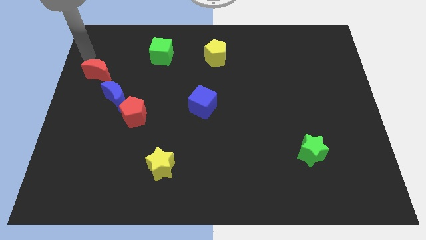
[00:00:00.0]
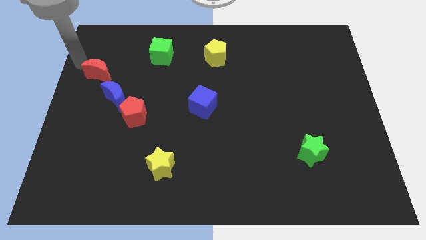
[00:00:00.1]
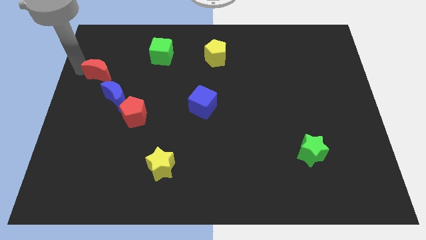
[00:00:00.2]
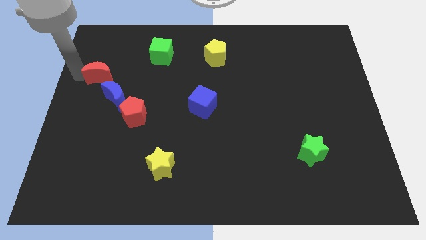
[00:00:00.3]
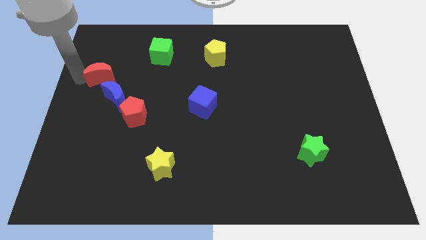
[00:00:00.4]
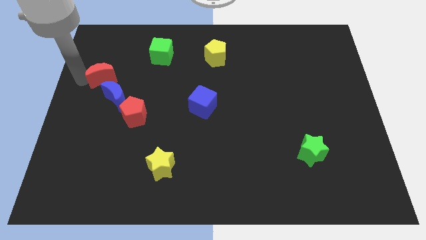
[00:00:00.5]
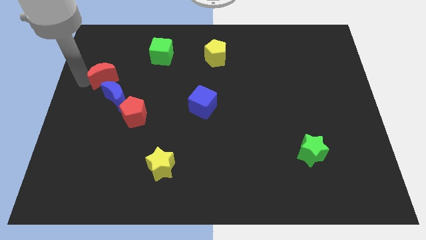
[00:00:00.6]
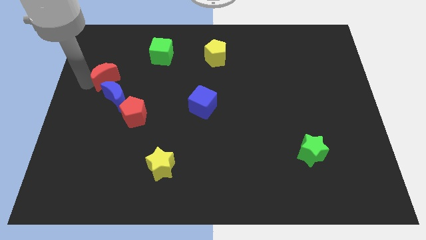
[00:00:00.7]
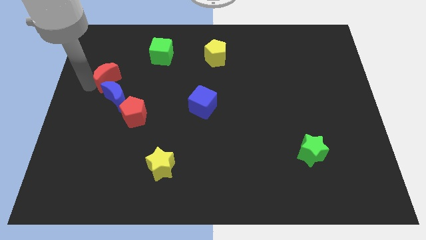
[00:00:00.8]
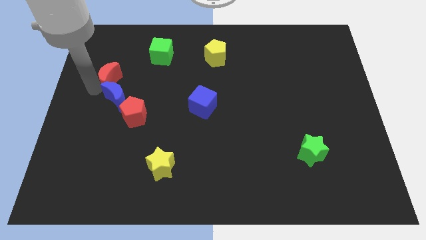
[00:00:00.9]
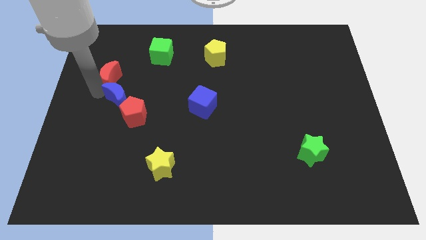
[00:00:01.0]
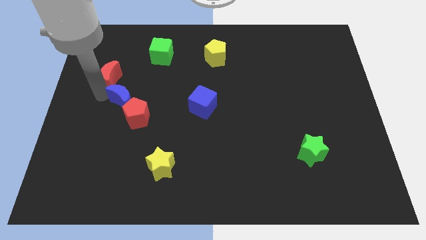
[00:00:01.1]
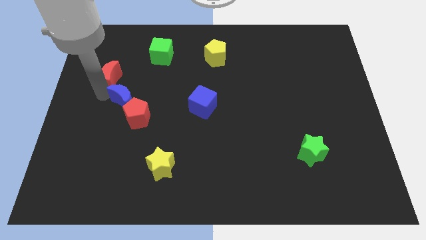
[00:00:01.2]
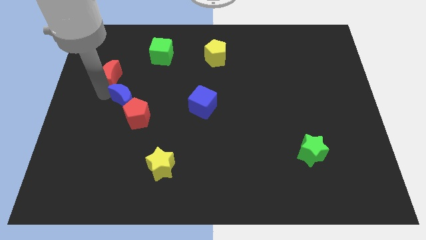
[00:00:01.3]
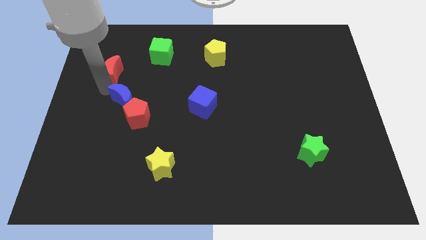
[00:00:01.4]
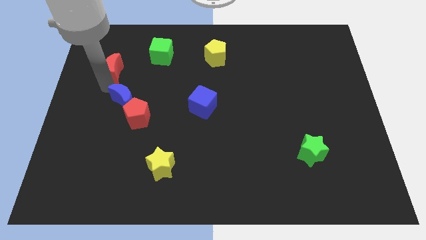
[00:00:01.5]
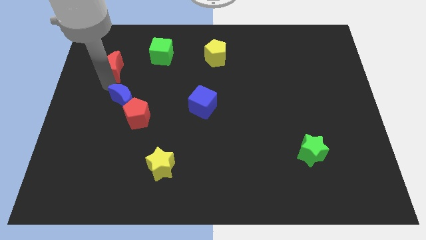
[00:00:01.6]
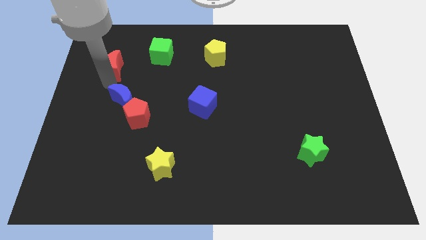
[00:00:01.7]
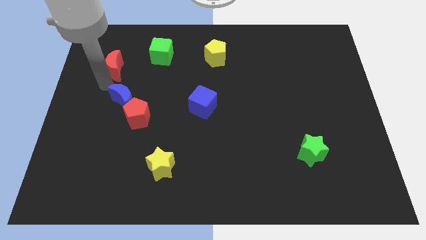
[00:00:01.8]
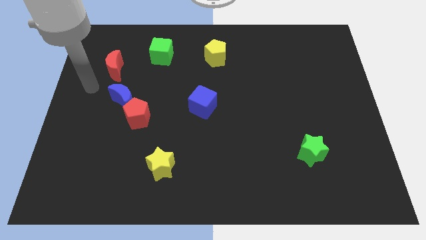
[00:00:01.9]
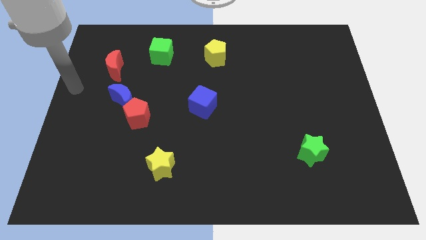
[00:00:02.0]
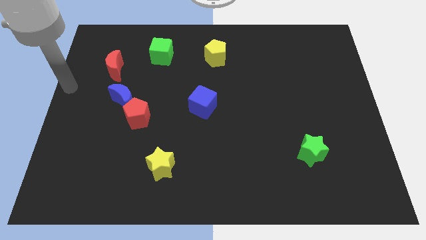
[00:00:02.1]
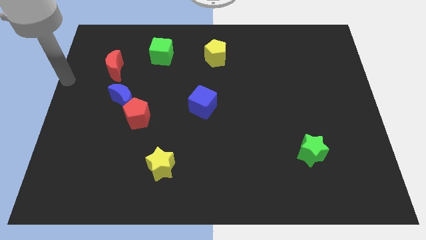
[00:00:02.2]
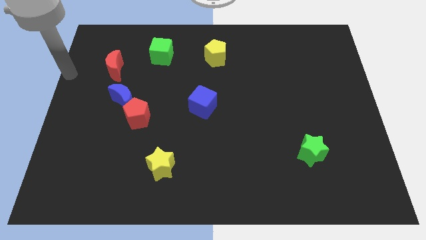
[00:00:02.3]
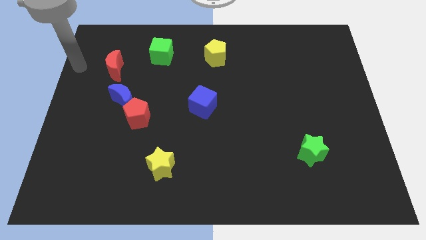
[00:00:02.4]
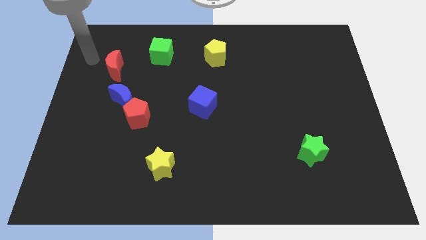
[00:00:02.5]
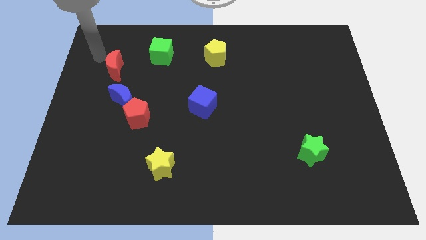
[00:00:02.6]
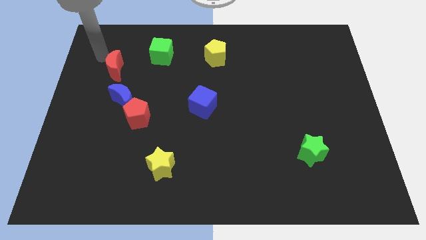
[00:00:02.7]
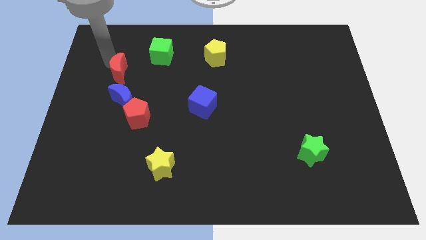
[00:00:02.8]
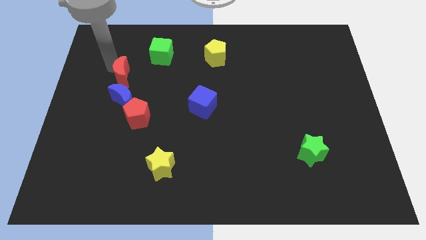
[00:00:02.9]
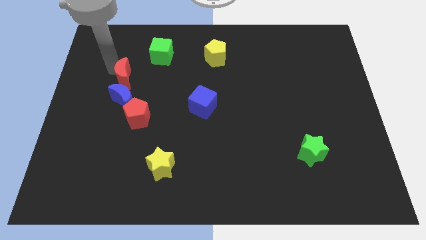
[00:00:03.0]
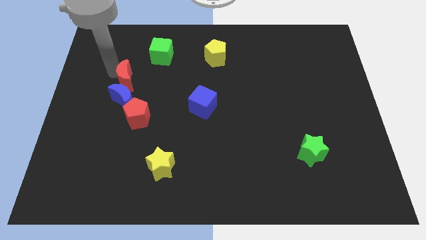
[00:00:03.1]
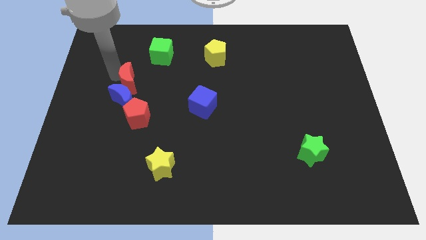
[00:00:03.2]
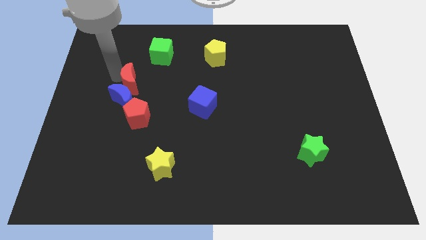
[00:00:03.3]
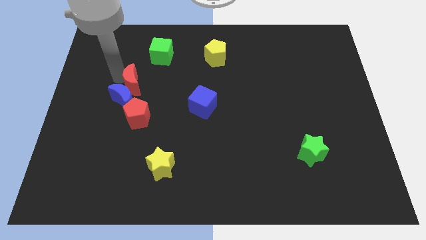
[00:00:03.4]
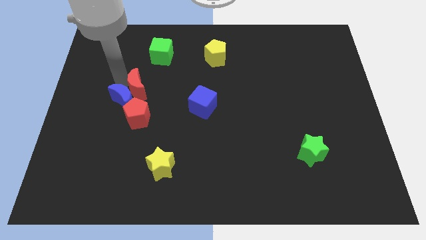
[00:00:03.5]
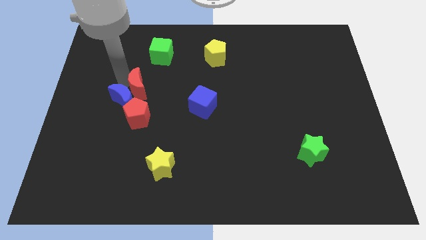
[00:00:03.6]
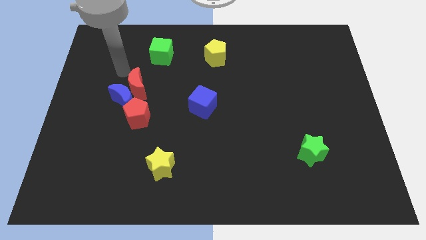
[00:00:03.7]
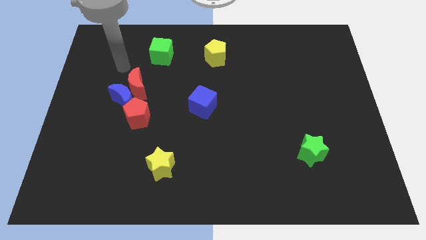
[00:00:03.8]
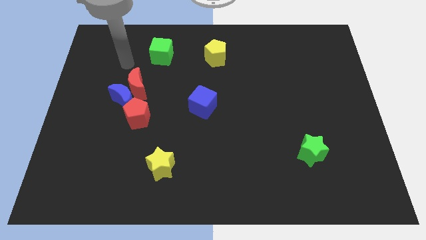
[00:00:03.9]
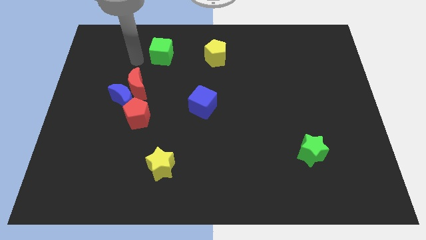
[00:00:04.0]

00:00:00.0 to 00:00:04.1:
move the red crescent above to the red pentagon

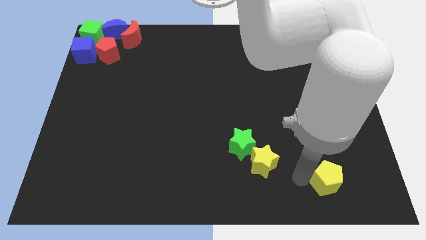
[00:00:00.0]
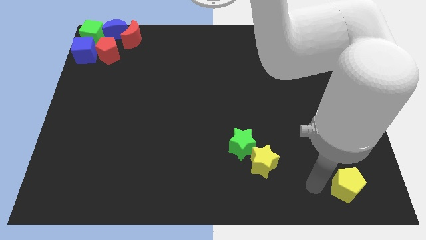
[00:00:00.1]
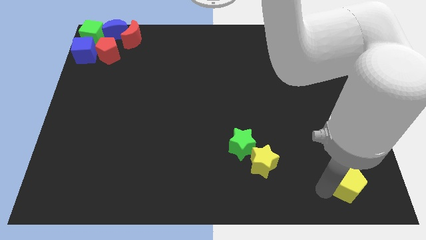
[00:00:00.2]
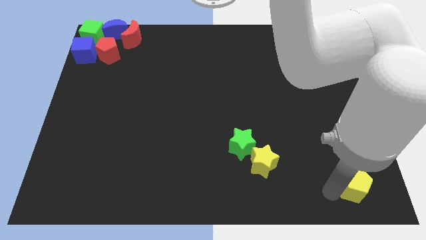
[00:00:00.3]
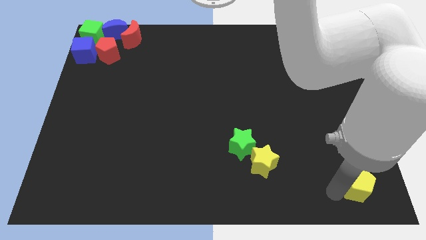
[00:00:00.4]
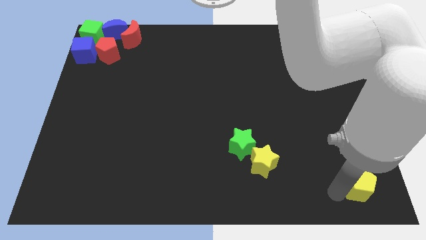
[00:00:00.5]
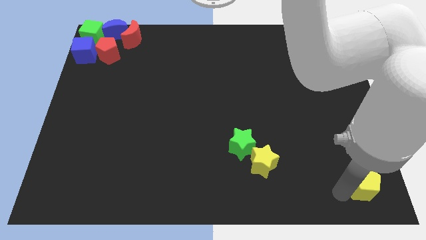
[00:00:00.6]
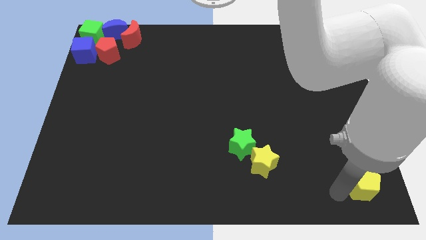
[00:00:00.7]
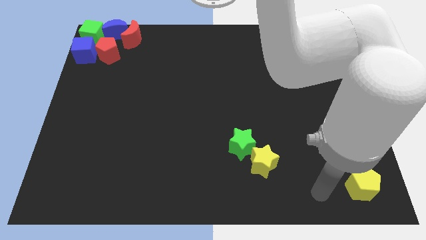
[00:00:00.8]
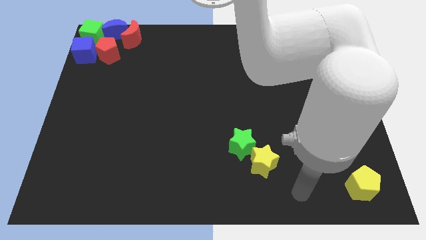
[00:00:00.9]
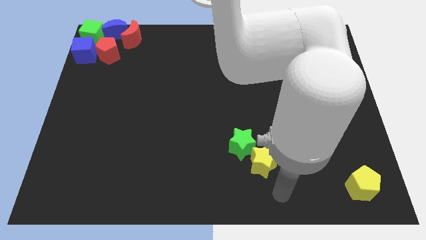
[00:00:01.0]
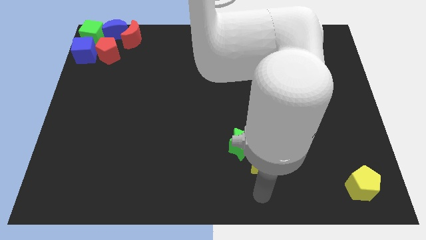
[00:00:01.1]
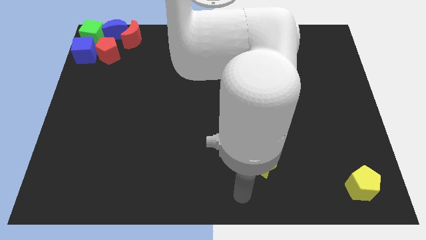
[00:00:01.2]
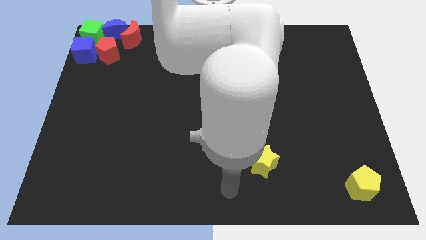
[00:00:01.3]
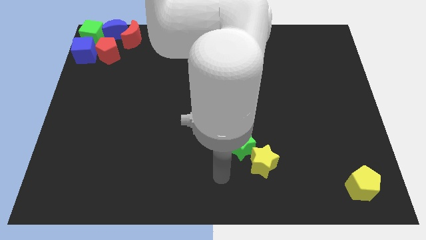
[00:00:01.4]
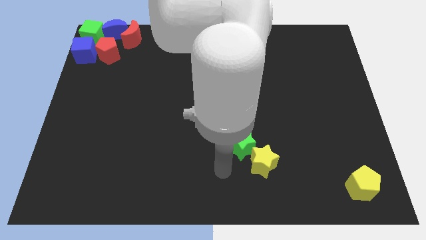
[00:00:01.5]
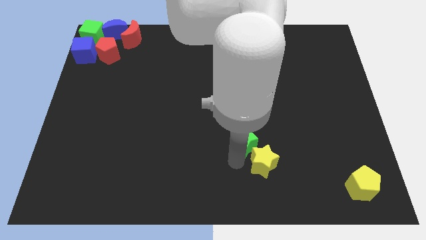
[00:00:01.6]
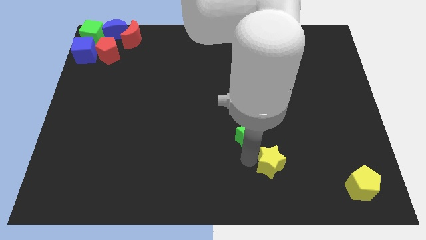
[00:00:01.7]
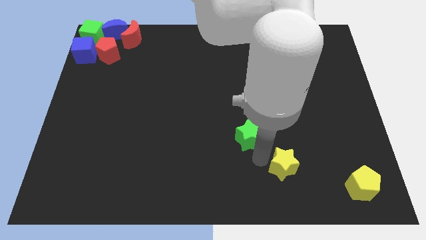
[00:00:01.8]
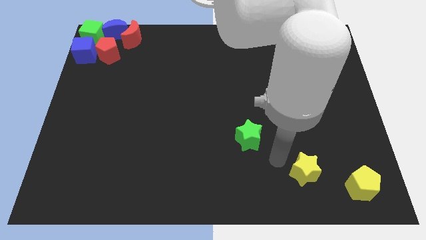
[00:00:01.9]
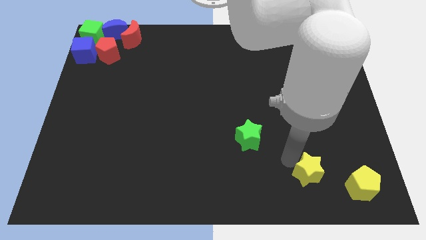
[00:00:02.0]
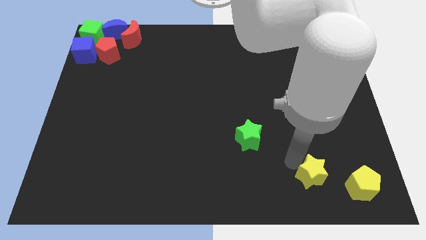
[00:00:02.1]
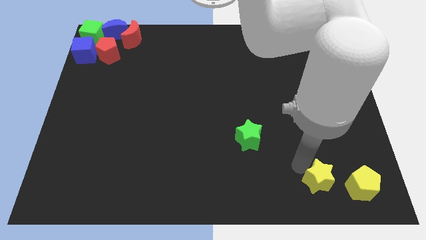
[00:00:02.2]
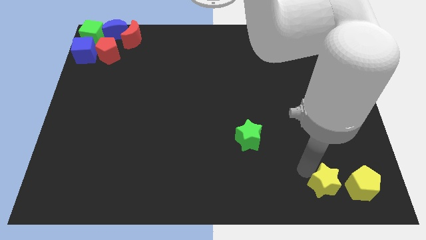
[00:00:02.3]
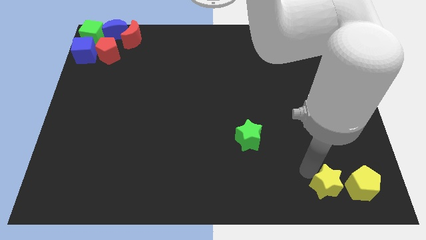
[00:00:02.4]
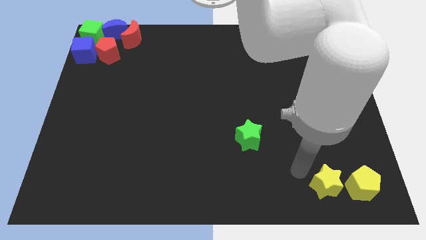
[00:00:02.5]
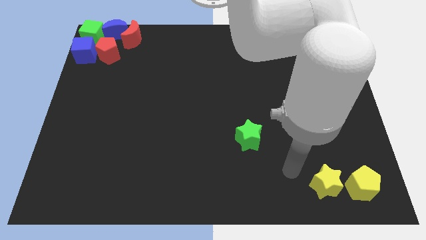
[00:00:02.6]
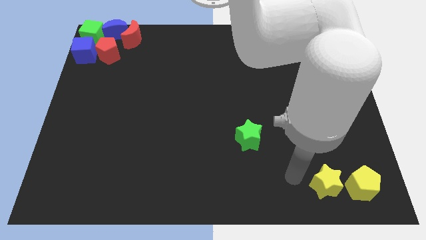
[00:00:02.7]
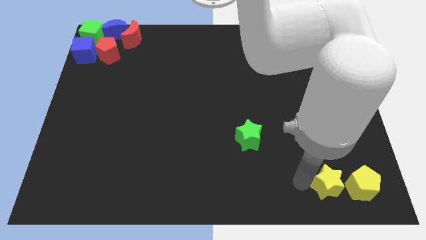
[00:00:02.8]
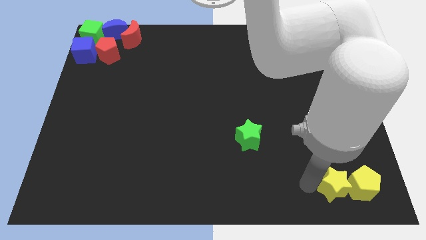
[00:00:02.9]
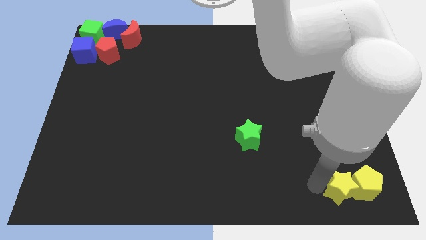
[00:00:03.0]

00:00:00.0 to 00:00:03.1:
push the yellow blocks at te bottom right of the table

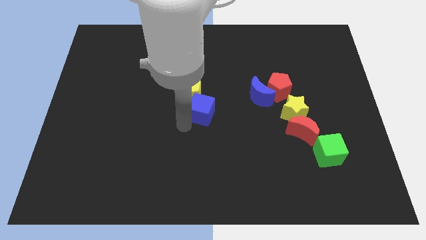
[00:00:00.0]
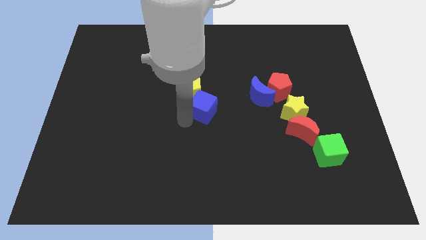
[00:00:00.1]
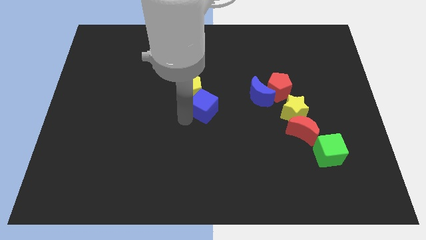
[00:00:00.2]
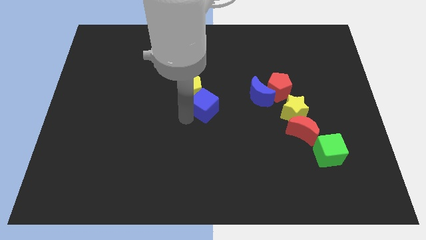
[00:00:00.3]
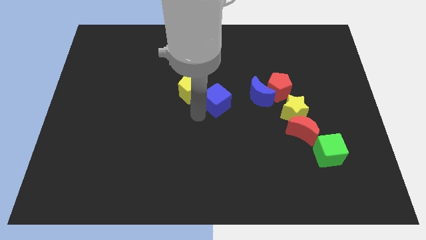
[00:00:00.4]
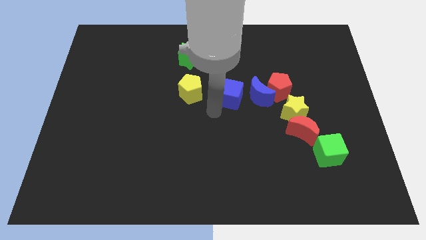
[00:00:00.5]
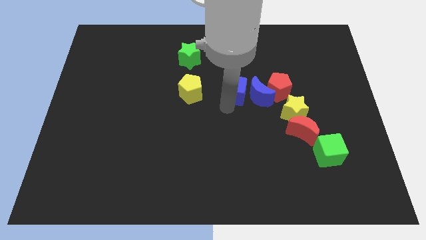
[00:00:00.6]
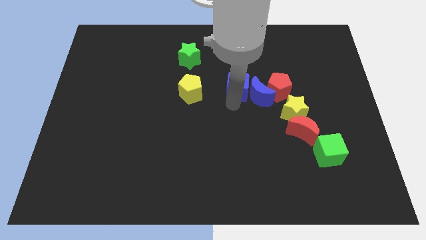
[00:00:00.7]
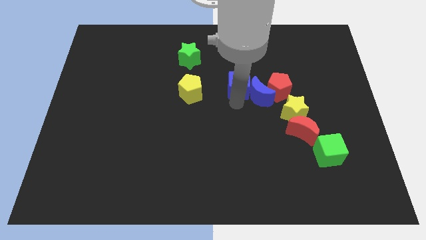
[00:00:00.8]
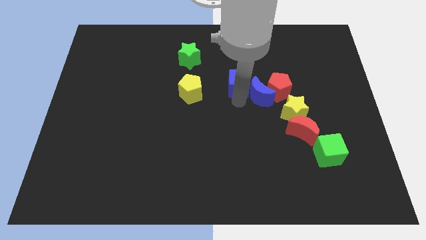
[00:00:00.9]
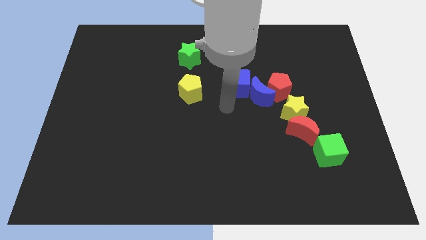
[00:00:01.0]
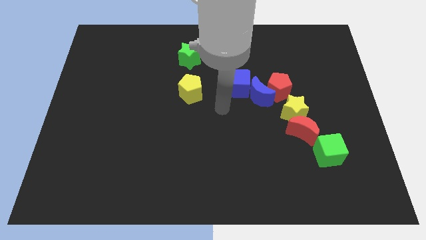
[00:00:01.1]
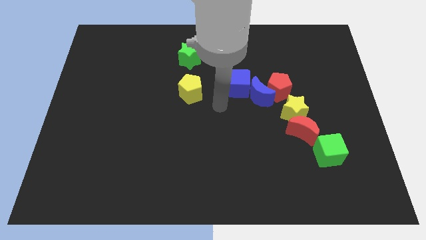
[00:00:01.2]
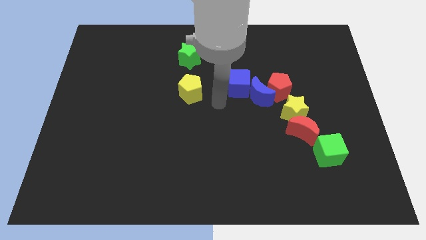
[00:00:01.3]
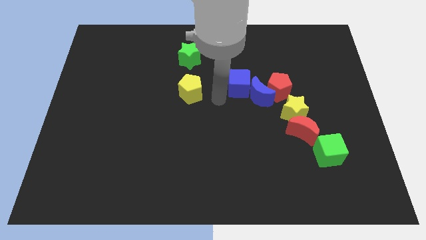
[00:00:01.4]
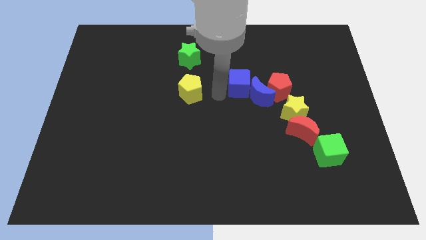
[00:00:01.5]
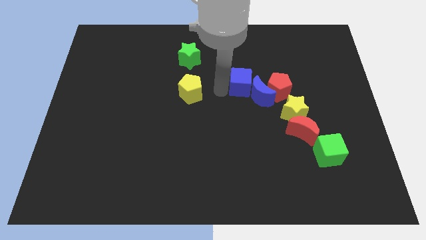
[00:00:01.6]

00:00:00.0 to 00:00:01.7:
move the blue cube towards the blue crescent
